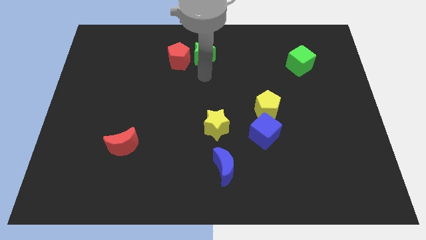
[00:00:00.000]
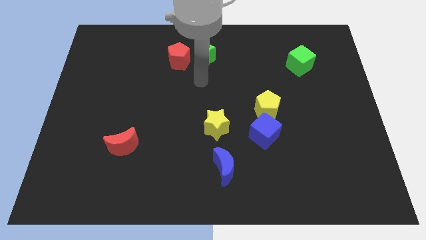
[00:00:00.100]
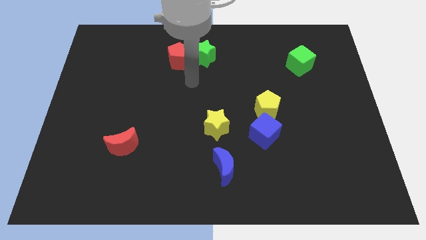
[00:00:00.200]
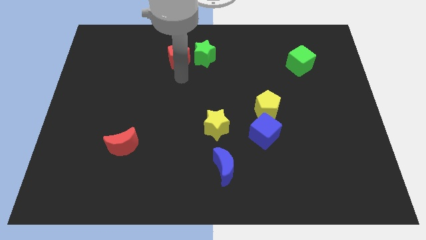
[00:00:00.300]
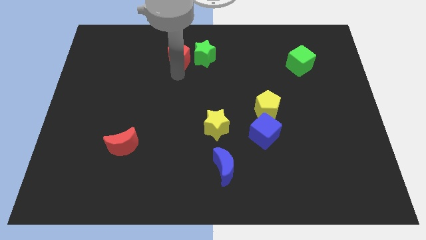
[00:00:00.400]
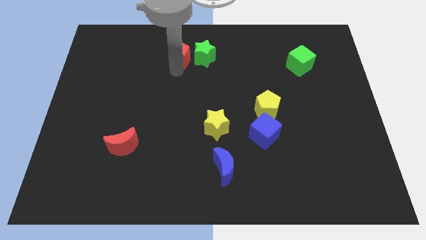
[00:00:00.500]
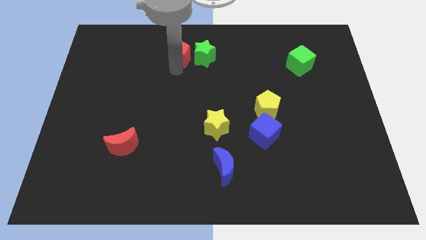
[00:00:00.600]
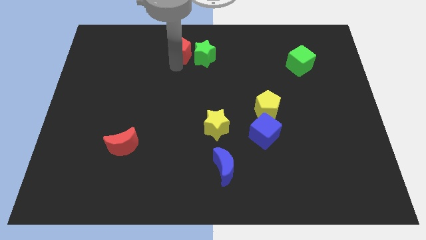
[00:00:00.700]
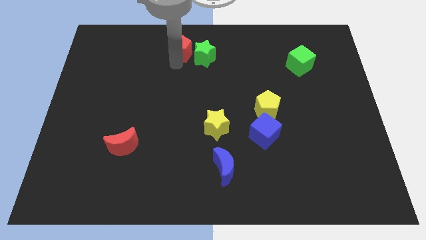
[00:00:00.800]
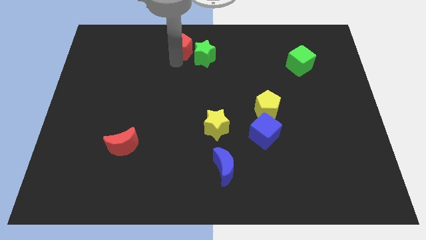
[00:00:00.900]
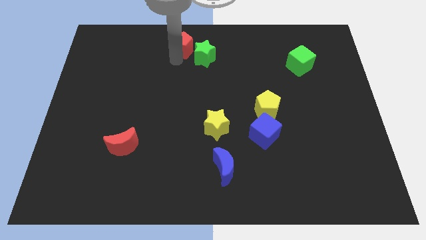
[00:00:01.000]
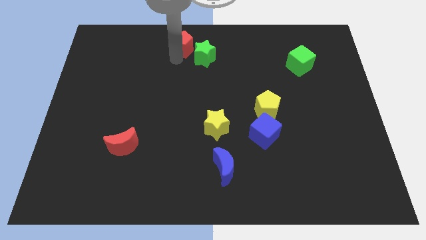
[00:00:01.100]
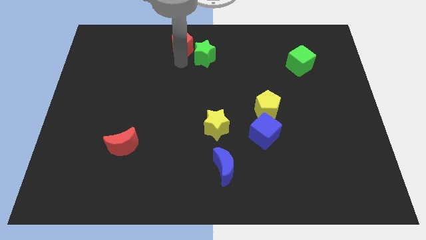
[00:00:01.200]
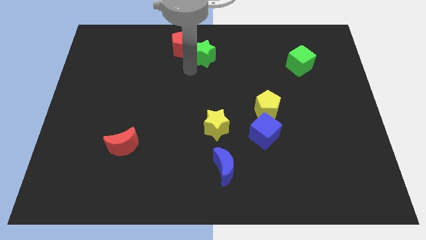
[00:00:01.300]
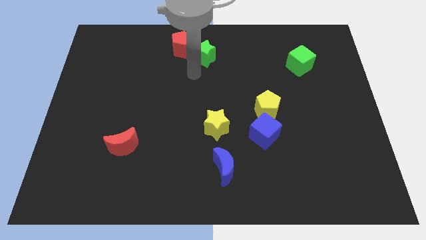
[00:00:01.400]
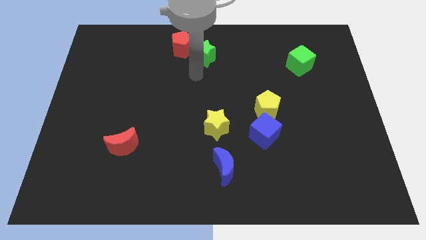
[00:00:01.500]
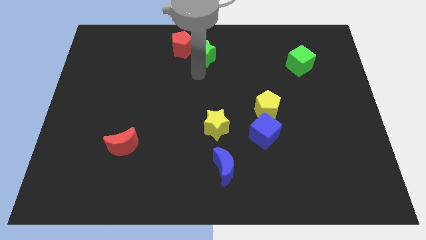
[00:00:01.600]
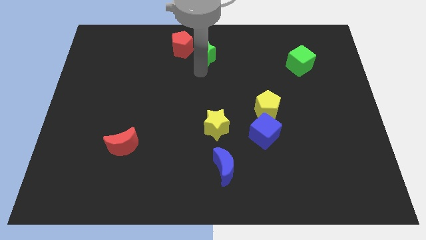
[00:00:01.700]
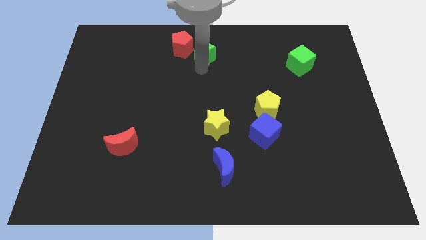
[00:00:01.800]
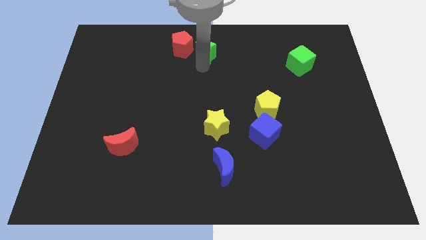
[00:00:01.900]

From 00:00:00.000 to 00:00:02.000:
move the red pentagon towards the top

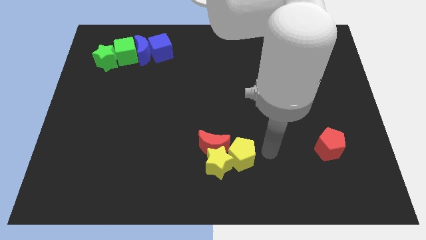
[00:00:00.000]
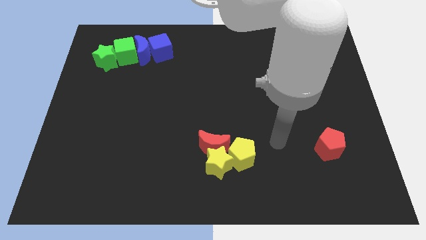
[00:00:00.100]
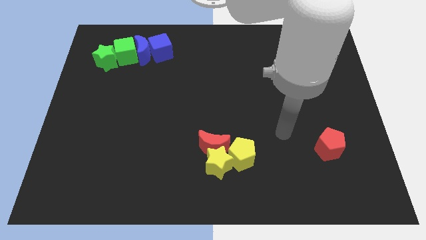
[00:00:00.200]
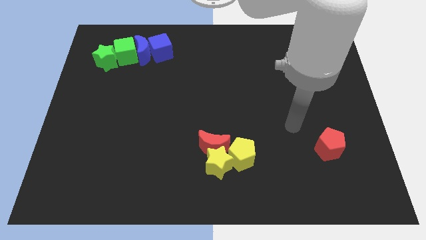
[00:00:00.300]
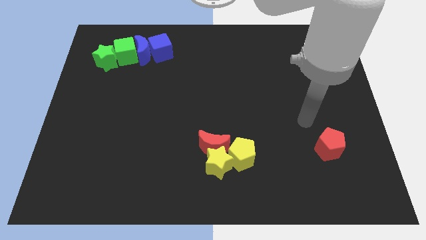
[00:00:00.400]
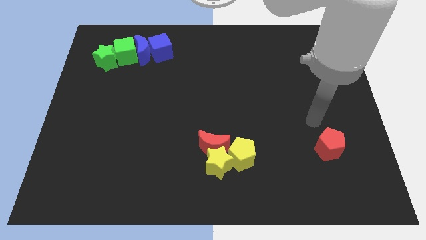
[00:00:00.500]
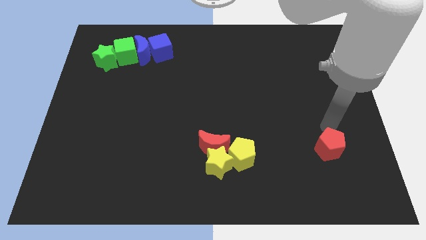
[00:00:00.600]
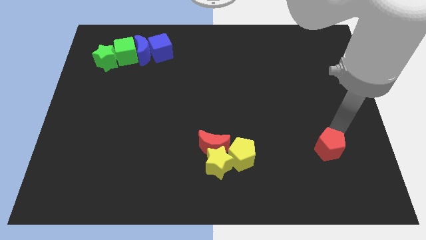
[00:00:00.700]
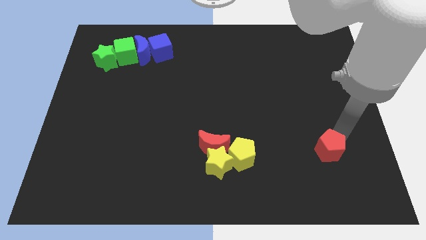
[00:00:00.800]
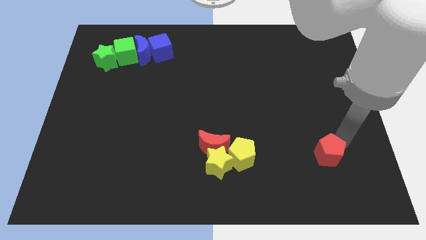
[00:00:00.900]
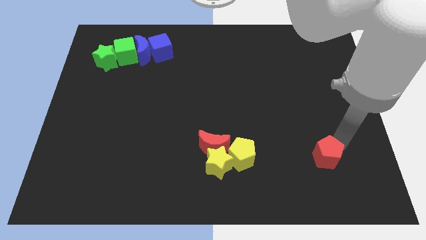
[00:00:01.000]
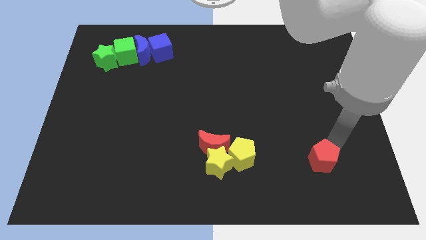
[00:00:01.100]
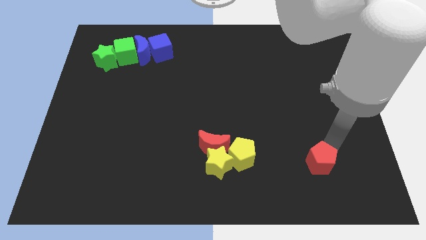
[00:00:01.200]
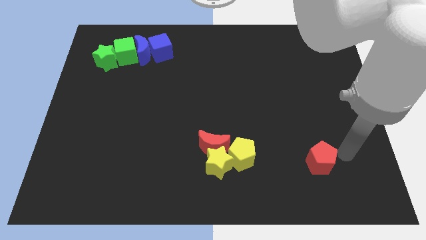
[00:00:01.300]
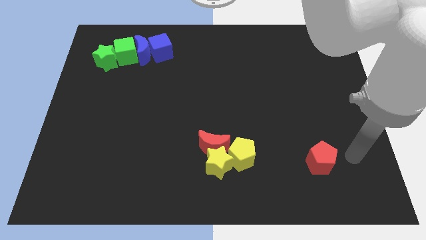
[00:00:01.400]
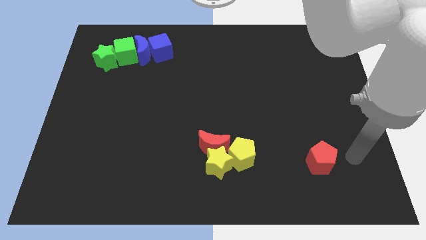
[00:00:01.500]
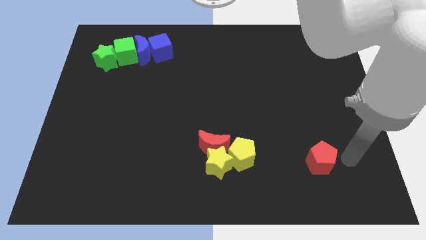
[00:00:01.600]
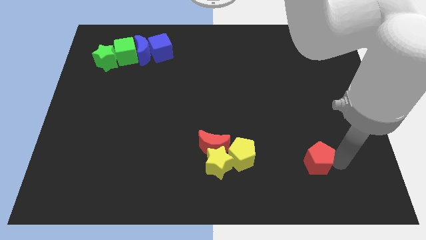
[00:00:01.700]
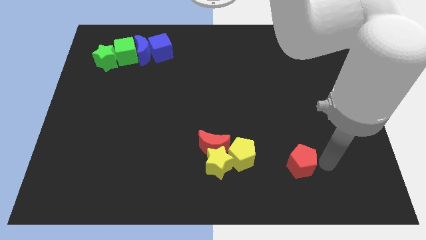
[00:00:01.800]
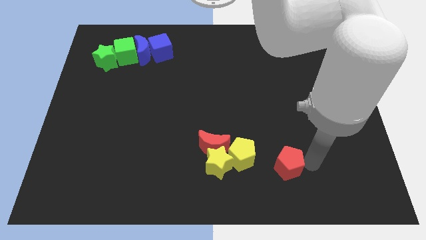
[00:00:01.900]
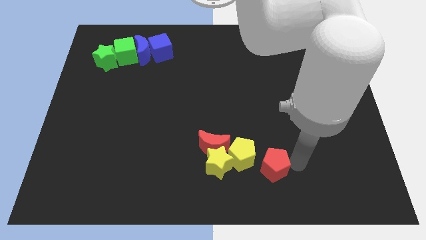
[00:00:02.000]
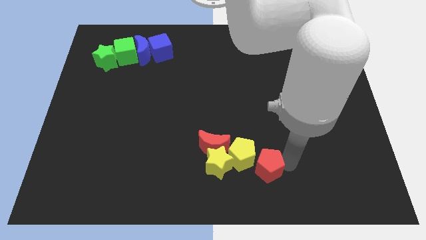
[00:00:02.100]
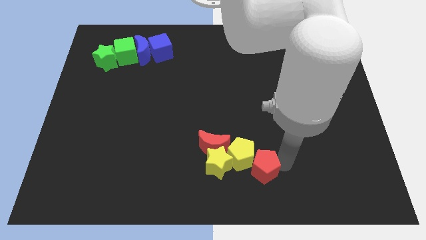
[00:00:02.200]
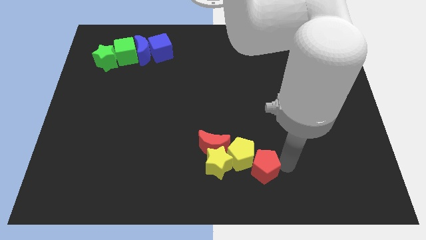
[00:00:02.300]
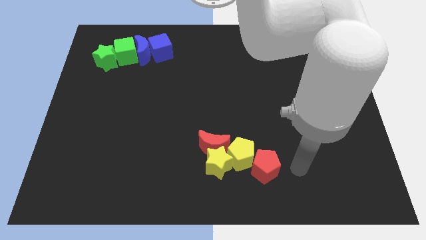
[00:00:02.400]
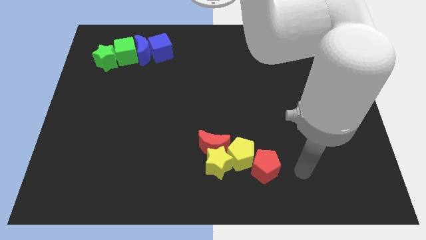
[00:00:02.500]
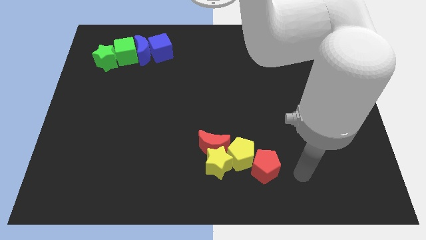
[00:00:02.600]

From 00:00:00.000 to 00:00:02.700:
push the red pentagon into the yellow pentagon

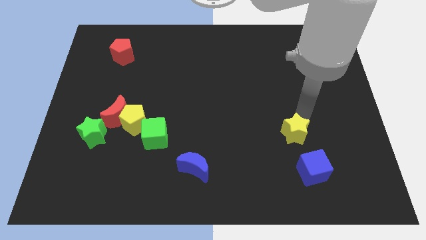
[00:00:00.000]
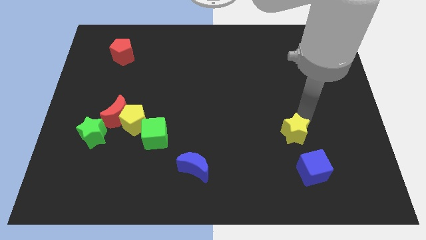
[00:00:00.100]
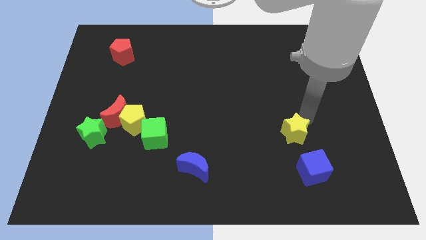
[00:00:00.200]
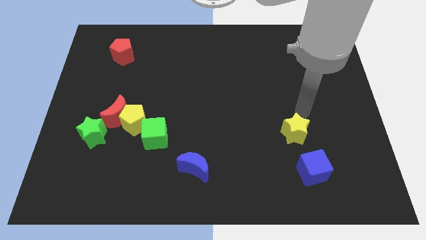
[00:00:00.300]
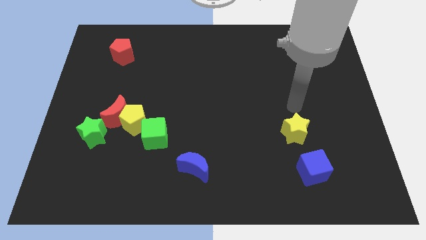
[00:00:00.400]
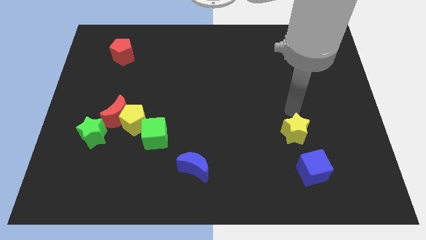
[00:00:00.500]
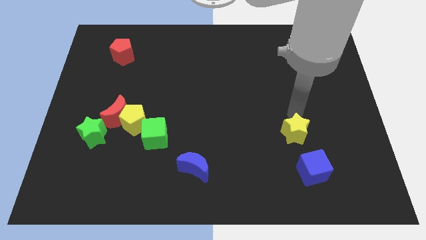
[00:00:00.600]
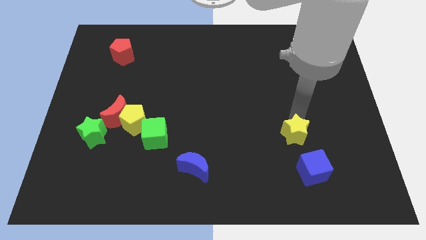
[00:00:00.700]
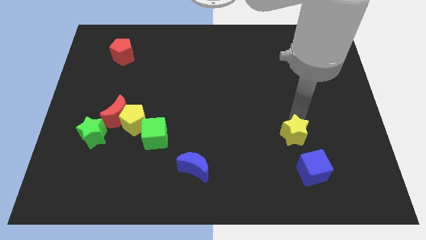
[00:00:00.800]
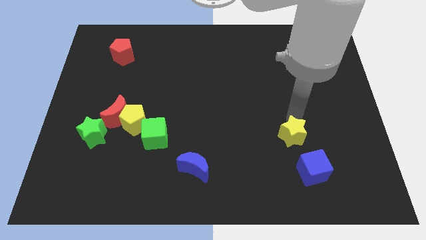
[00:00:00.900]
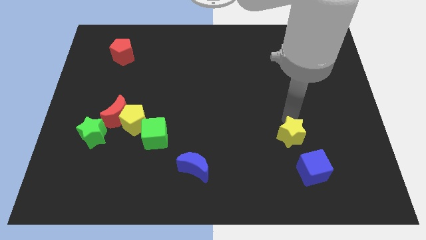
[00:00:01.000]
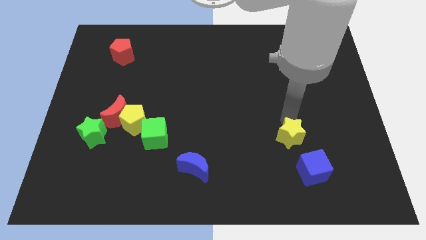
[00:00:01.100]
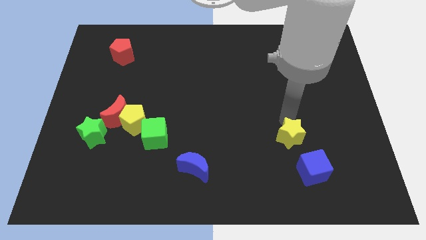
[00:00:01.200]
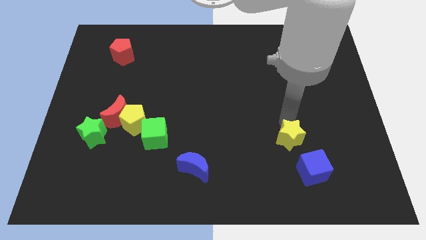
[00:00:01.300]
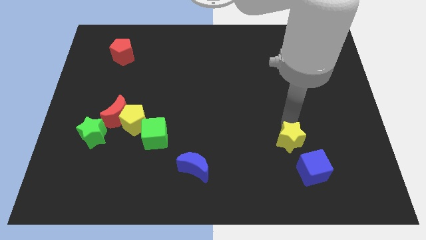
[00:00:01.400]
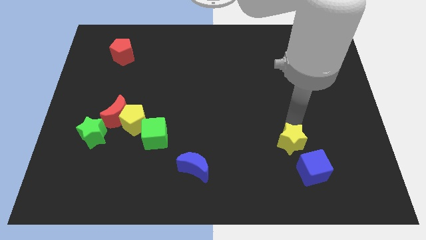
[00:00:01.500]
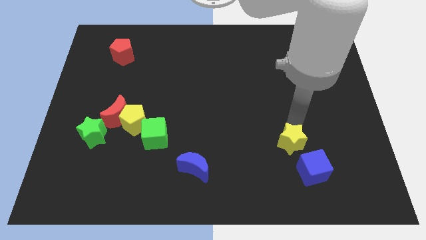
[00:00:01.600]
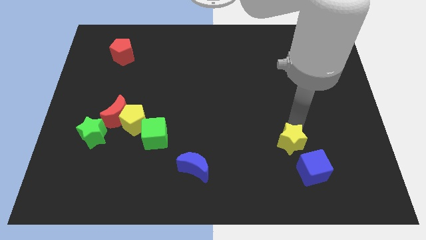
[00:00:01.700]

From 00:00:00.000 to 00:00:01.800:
push the yellow star close to the blue cube

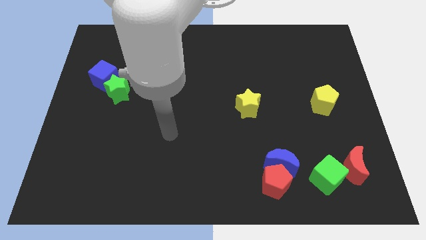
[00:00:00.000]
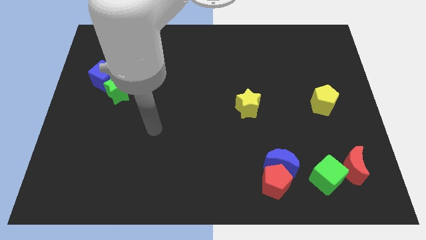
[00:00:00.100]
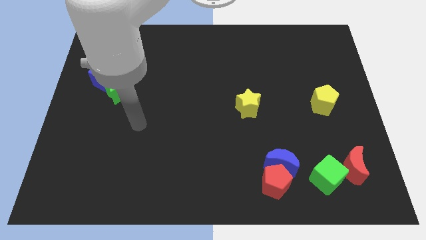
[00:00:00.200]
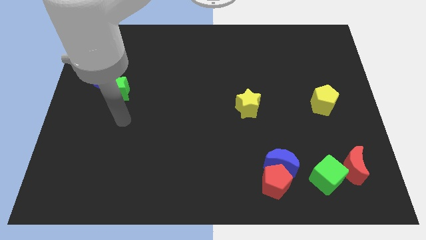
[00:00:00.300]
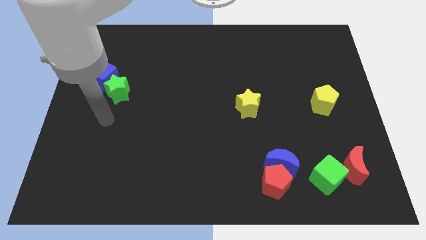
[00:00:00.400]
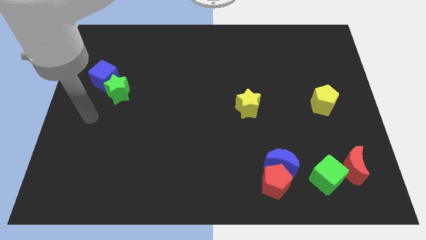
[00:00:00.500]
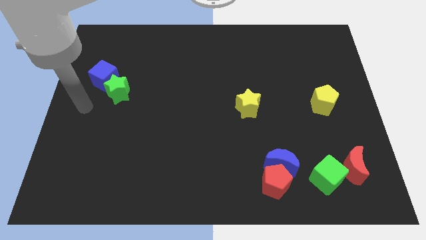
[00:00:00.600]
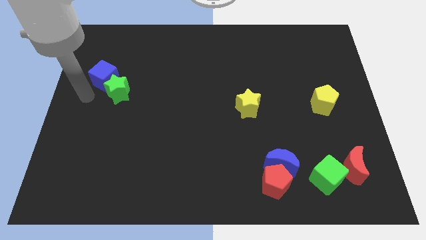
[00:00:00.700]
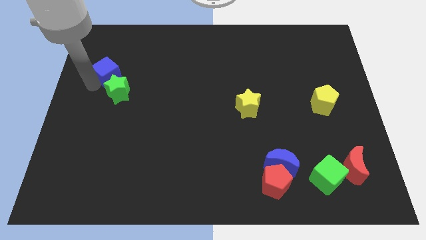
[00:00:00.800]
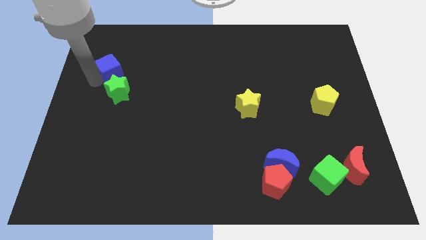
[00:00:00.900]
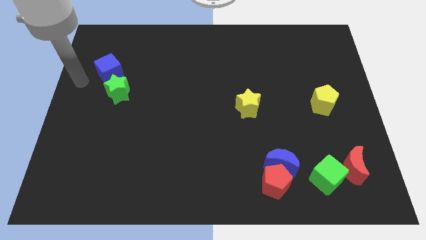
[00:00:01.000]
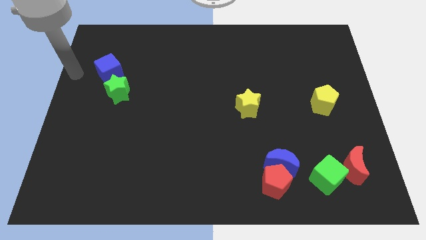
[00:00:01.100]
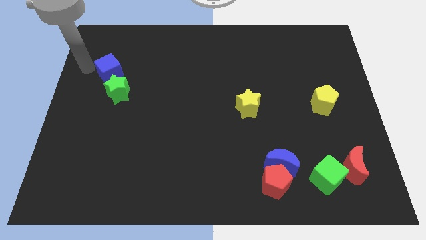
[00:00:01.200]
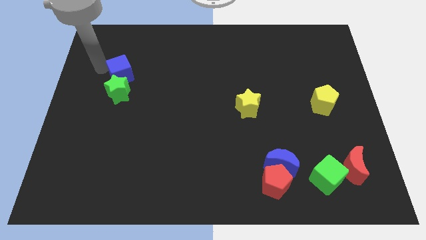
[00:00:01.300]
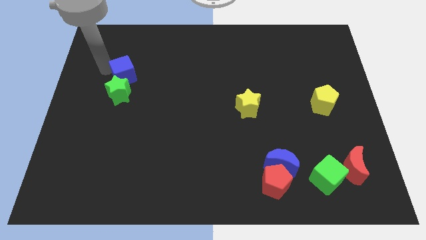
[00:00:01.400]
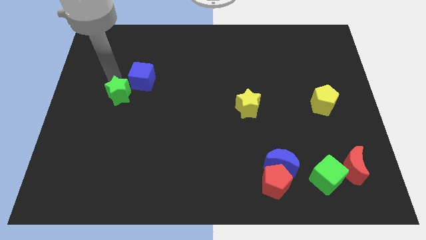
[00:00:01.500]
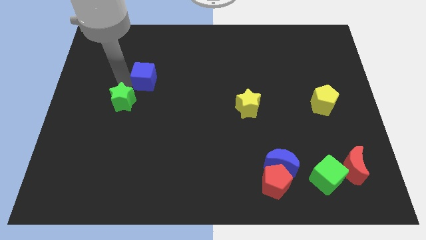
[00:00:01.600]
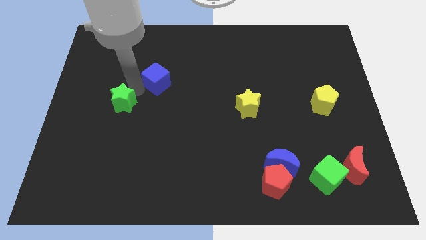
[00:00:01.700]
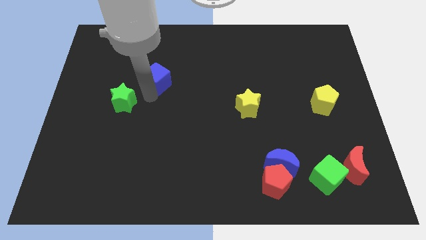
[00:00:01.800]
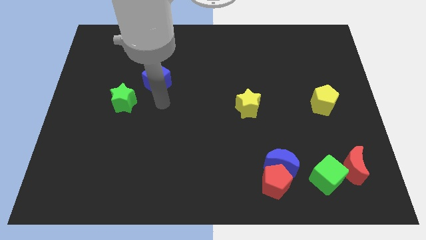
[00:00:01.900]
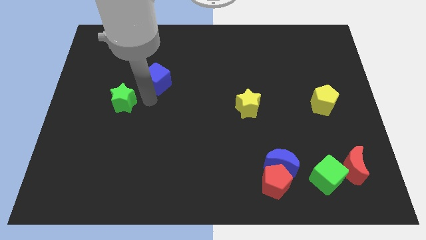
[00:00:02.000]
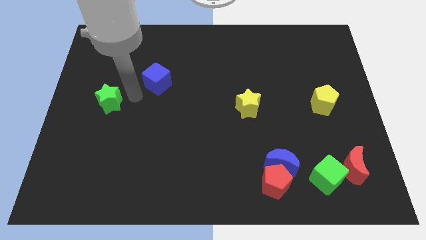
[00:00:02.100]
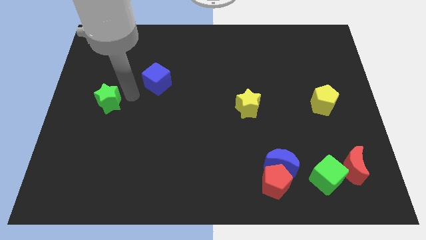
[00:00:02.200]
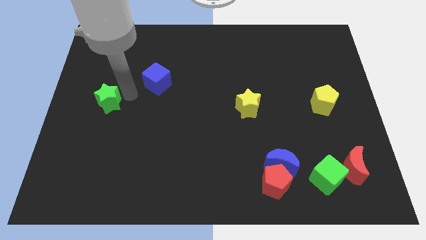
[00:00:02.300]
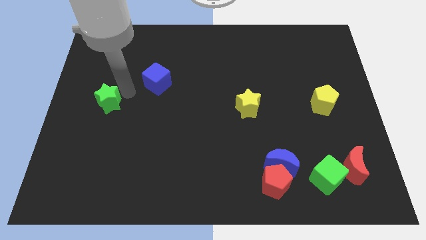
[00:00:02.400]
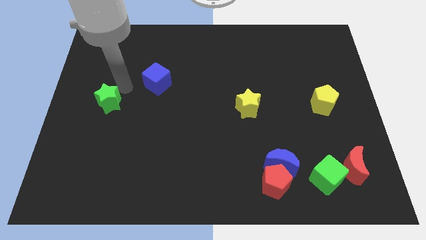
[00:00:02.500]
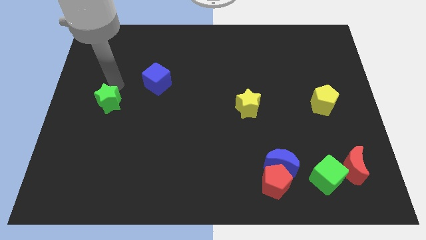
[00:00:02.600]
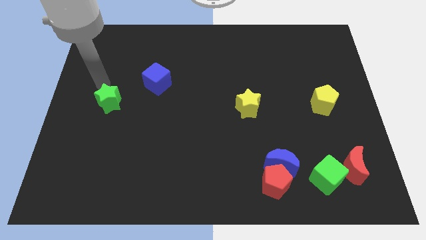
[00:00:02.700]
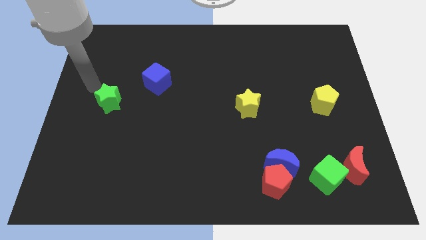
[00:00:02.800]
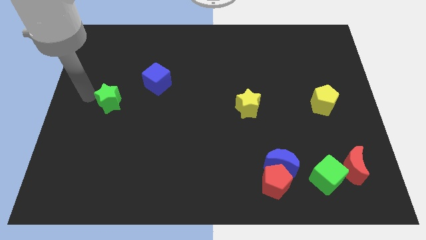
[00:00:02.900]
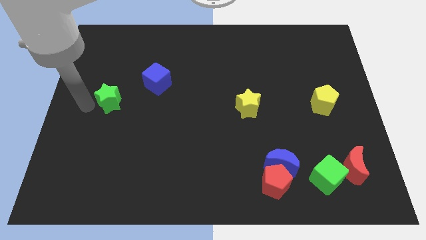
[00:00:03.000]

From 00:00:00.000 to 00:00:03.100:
separate the blue cube and the green star
